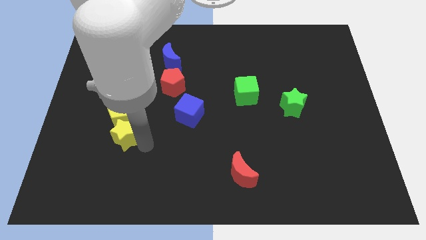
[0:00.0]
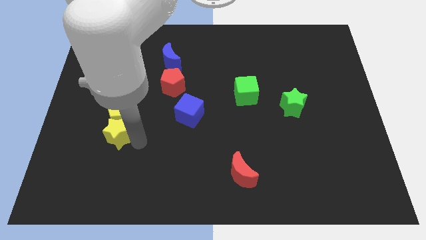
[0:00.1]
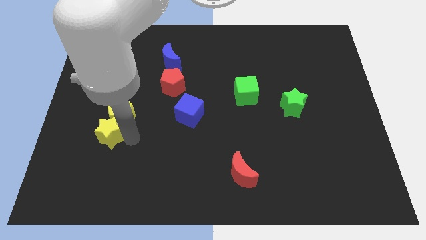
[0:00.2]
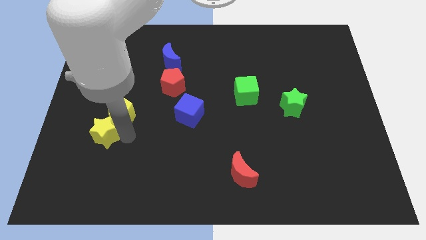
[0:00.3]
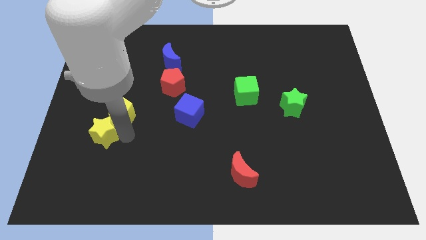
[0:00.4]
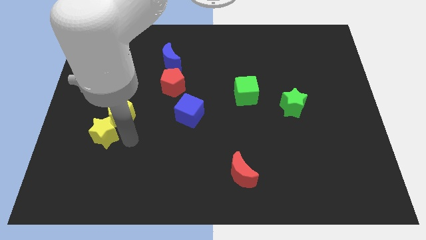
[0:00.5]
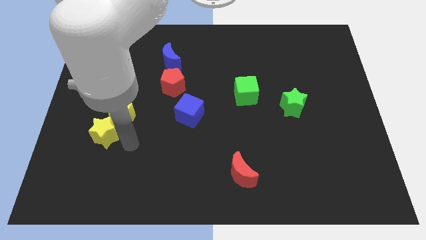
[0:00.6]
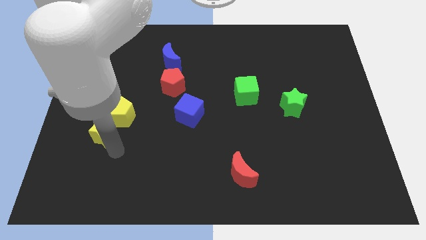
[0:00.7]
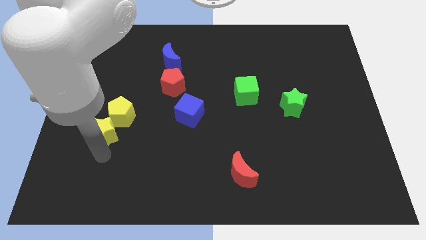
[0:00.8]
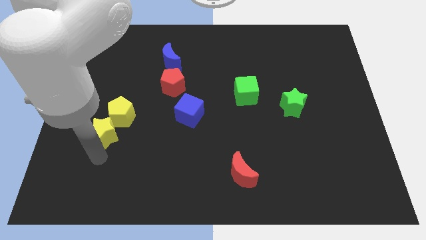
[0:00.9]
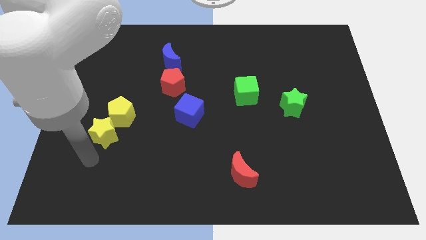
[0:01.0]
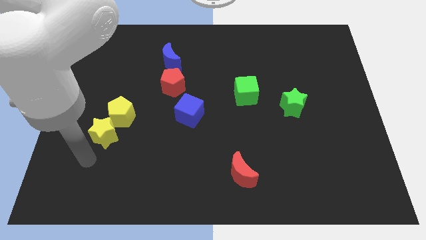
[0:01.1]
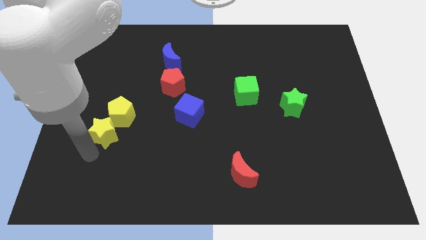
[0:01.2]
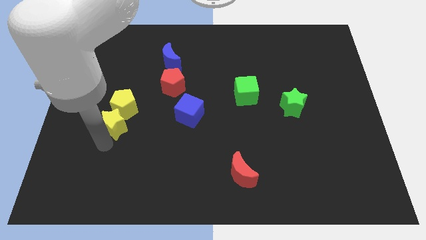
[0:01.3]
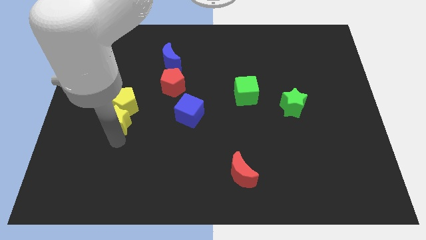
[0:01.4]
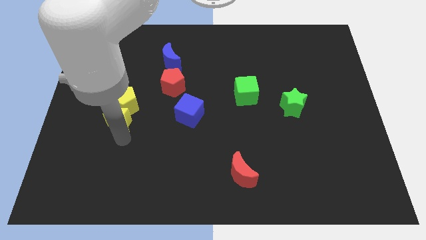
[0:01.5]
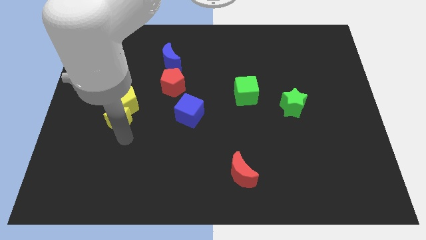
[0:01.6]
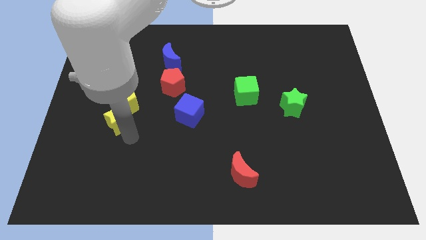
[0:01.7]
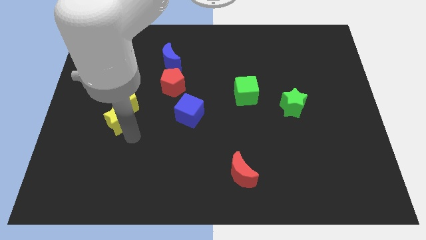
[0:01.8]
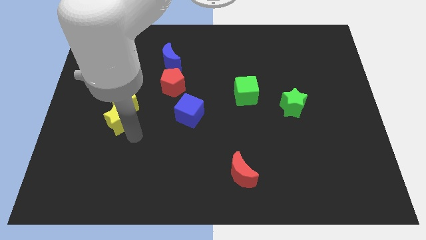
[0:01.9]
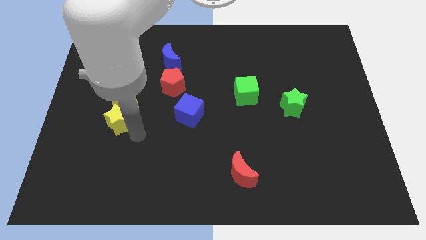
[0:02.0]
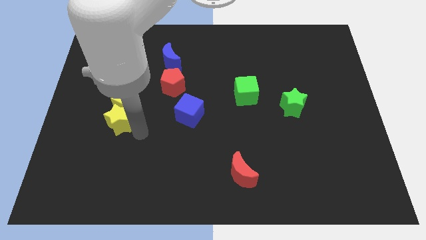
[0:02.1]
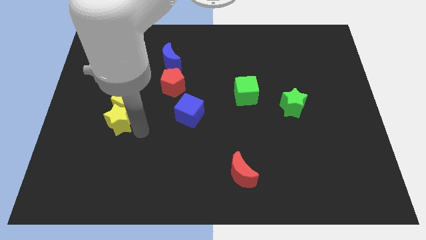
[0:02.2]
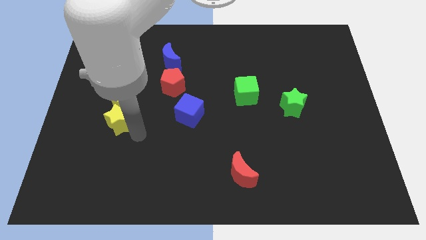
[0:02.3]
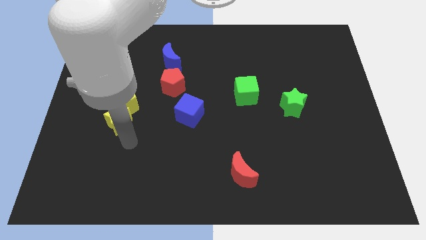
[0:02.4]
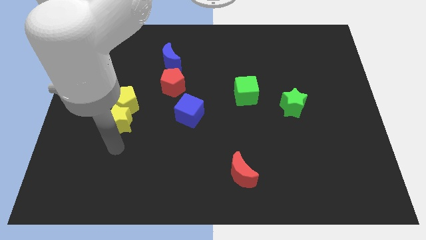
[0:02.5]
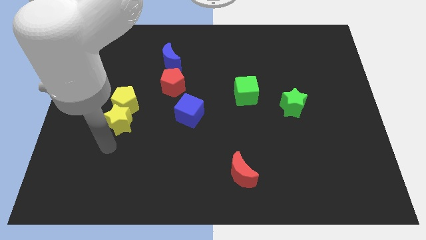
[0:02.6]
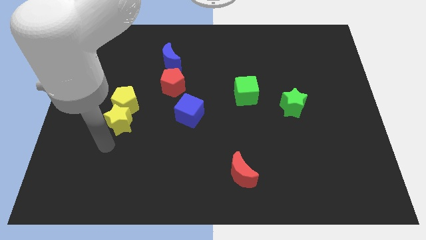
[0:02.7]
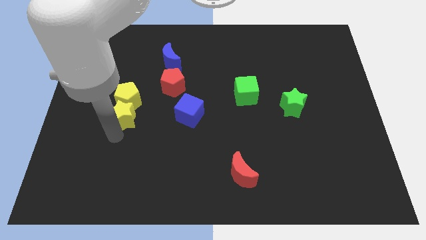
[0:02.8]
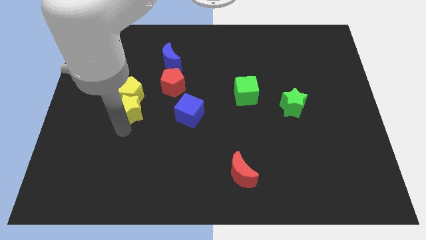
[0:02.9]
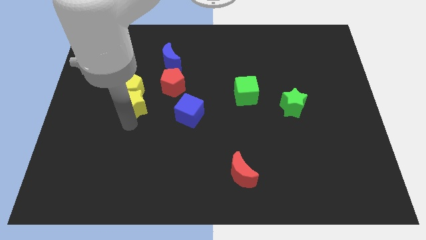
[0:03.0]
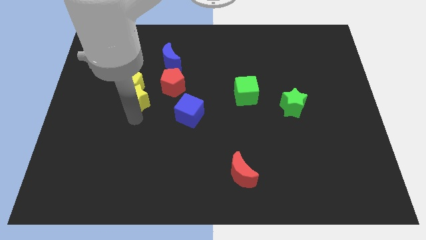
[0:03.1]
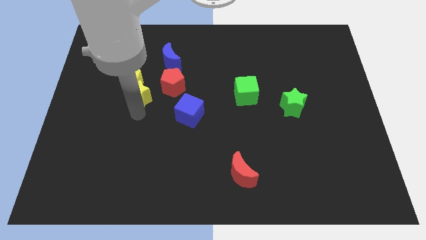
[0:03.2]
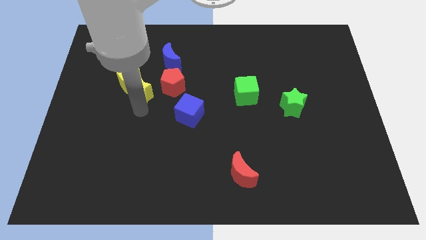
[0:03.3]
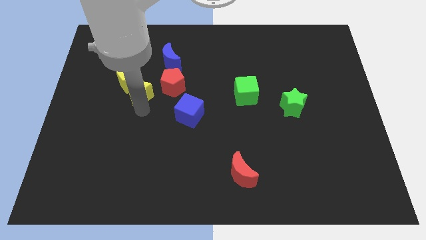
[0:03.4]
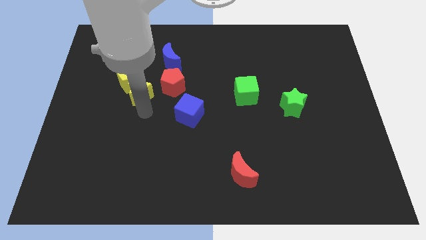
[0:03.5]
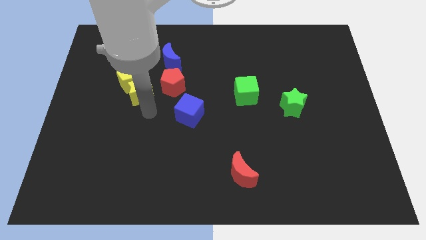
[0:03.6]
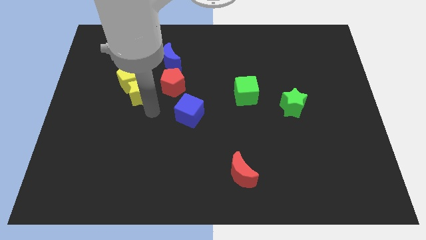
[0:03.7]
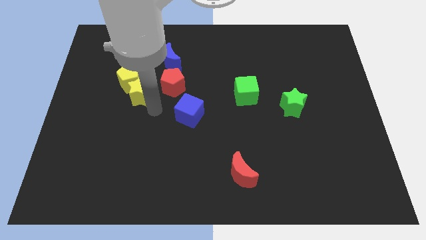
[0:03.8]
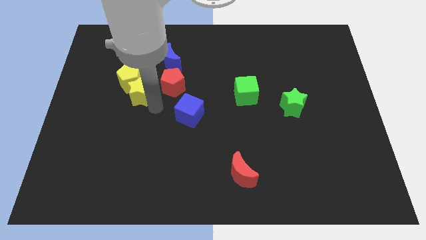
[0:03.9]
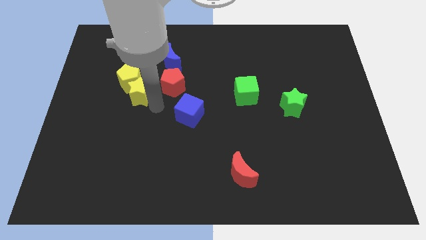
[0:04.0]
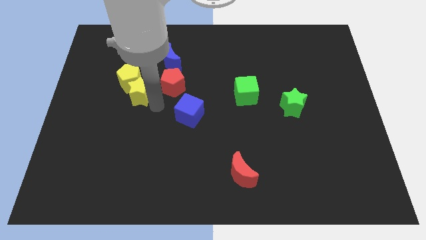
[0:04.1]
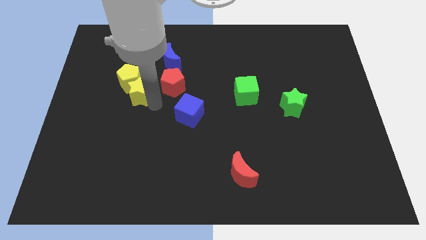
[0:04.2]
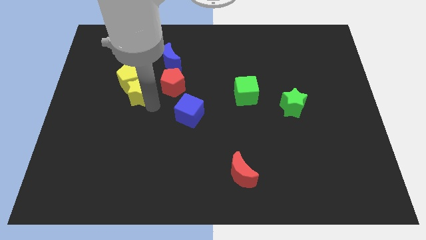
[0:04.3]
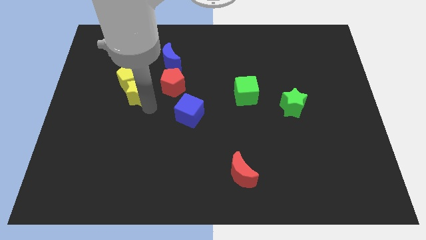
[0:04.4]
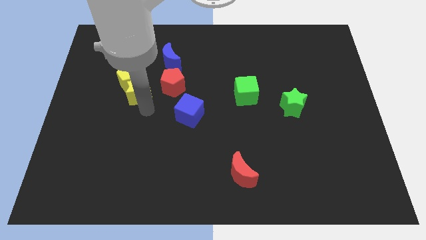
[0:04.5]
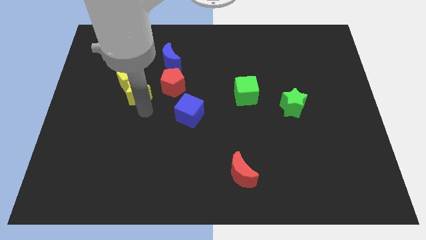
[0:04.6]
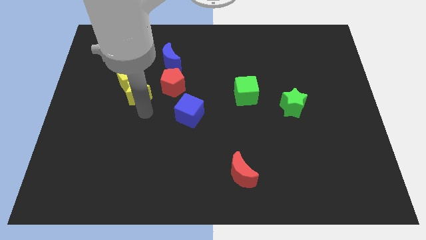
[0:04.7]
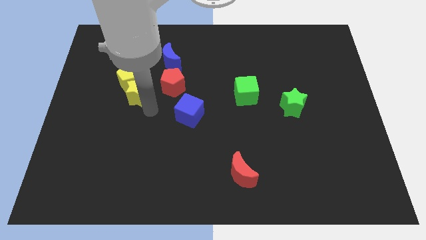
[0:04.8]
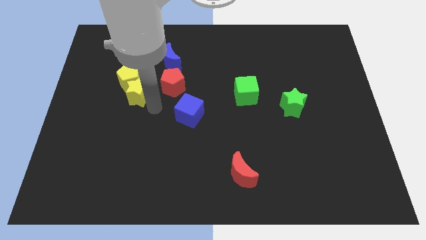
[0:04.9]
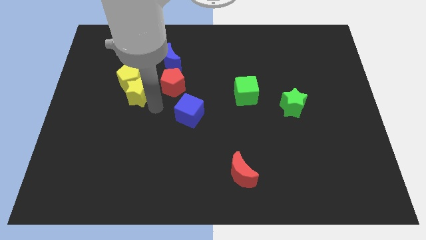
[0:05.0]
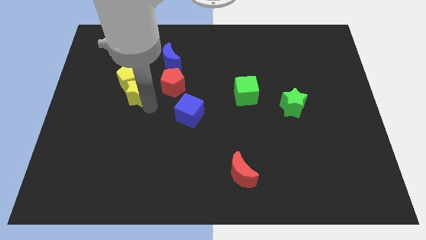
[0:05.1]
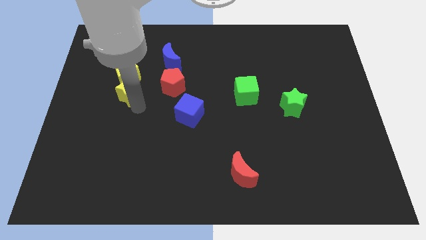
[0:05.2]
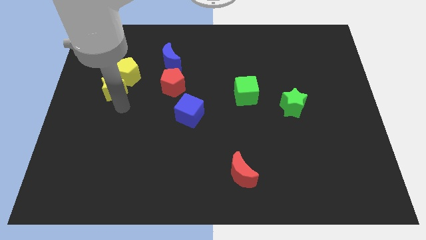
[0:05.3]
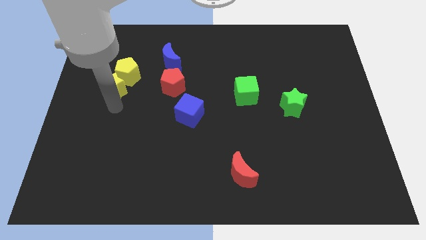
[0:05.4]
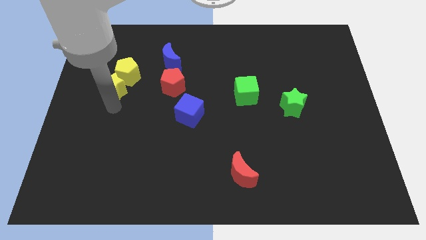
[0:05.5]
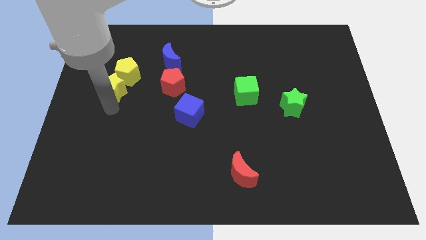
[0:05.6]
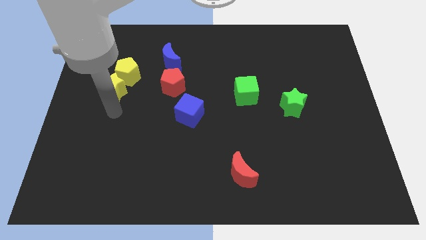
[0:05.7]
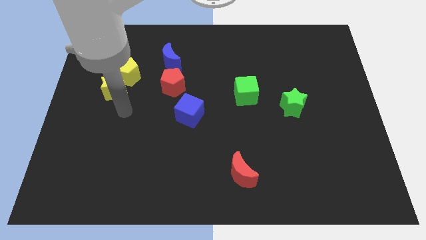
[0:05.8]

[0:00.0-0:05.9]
slide the yellow blocks upwards

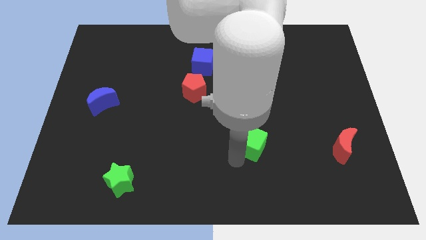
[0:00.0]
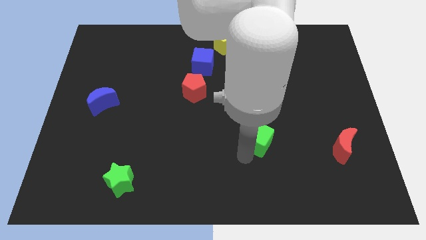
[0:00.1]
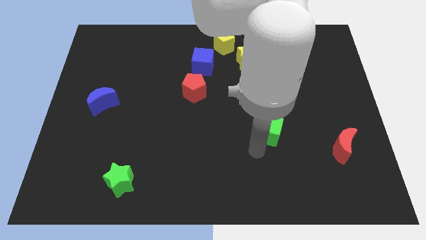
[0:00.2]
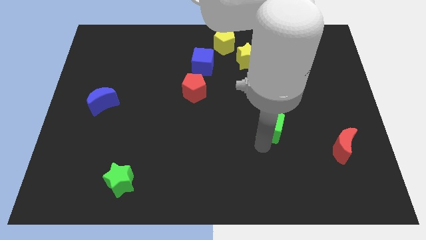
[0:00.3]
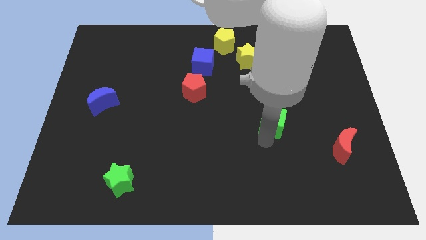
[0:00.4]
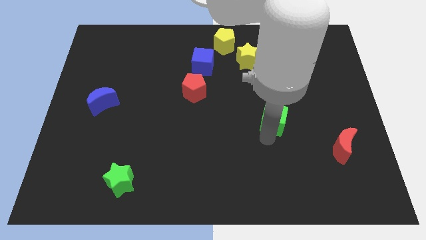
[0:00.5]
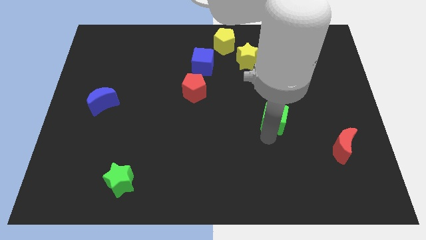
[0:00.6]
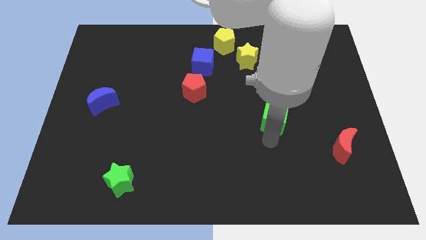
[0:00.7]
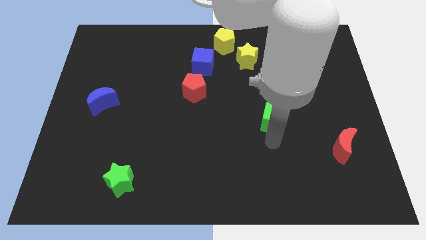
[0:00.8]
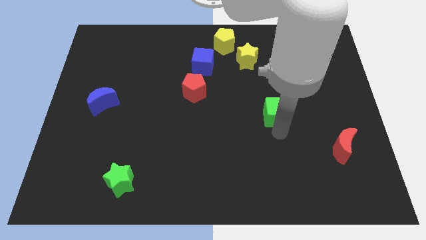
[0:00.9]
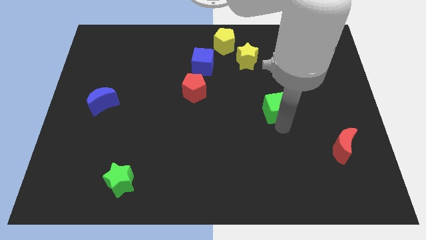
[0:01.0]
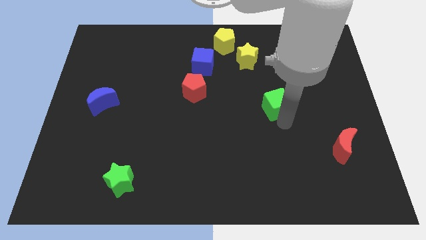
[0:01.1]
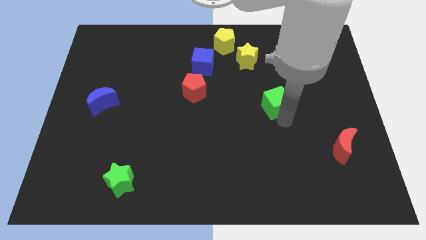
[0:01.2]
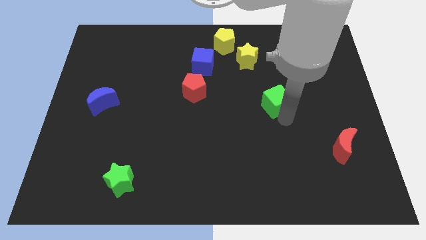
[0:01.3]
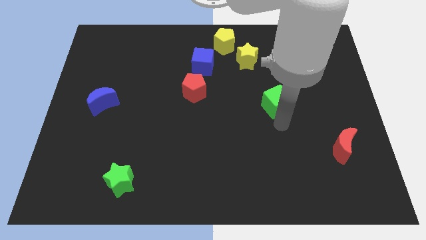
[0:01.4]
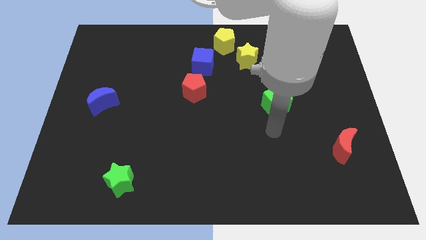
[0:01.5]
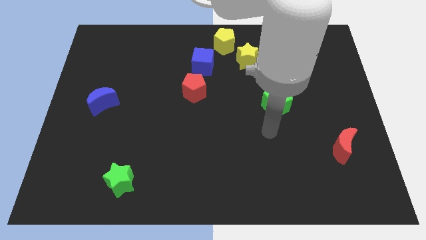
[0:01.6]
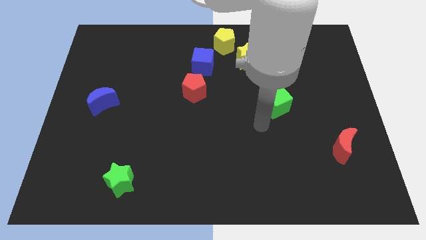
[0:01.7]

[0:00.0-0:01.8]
push the green cube to the top

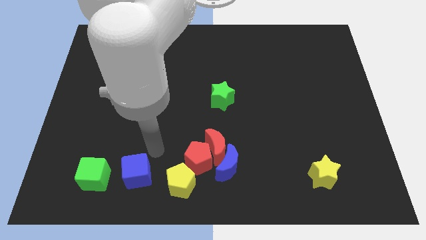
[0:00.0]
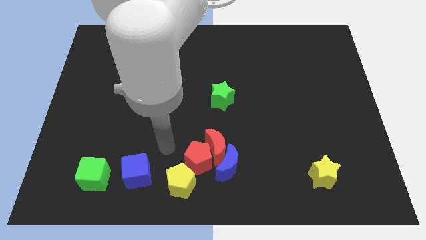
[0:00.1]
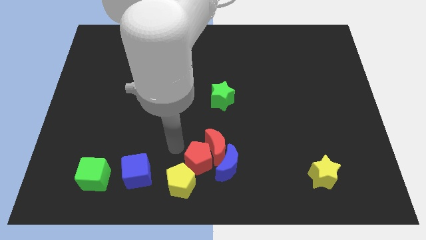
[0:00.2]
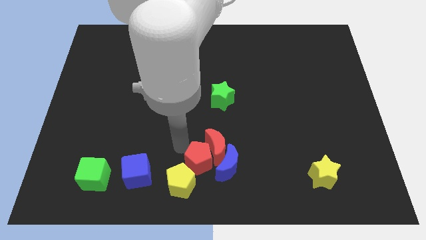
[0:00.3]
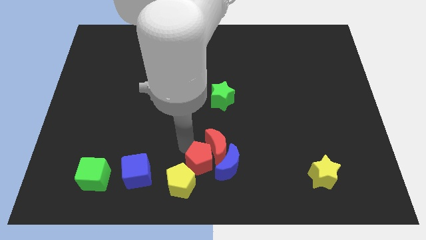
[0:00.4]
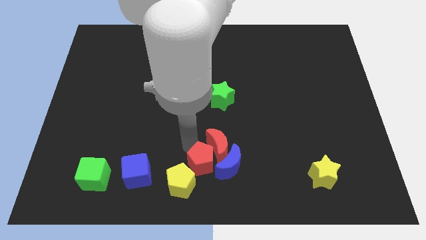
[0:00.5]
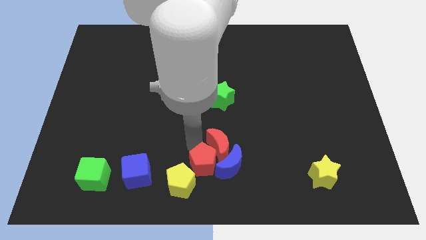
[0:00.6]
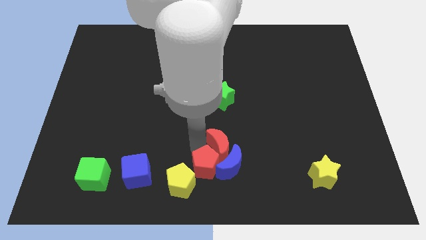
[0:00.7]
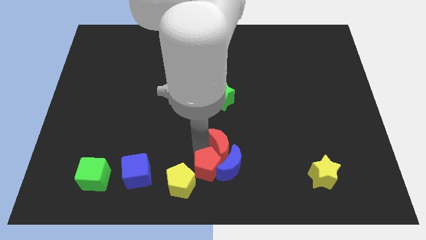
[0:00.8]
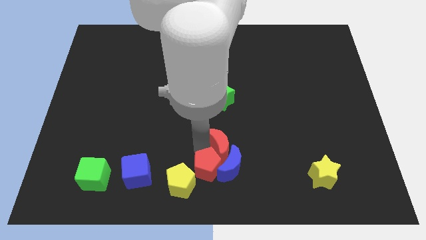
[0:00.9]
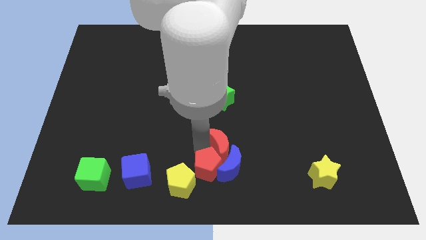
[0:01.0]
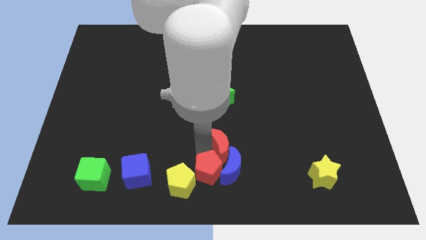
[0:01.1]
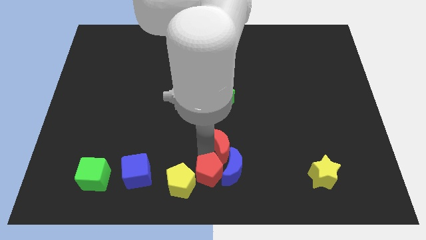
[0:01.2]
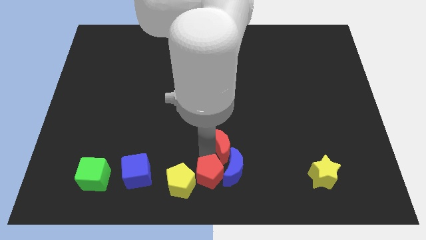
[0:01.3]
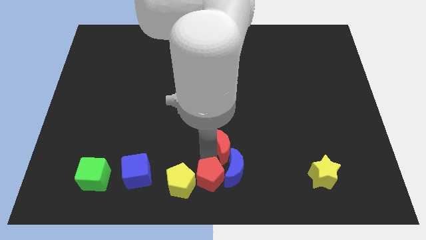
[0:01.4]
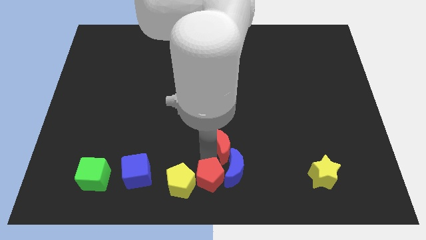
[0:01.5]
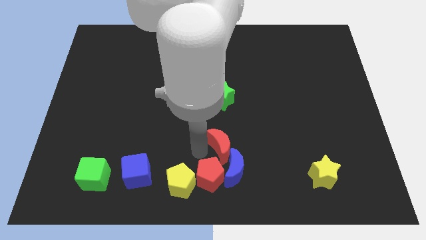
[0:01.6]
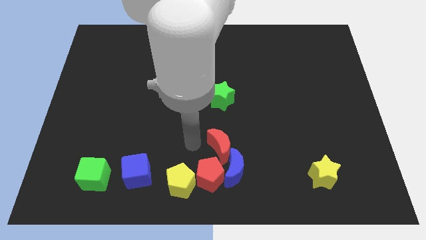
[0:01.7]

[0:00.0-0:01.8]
push the red pentagon slightly to the bottom
